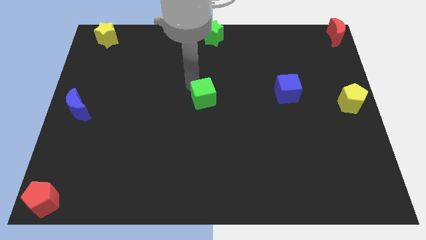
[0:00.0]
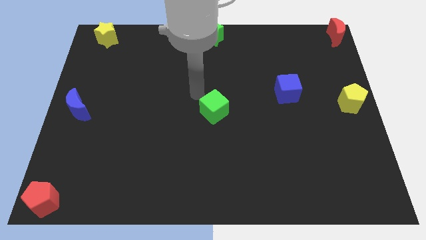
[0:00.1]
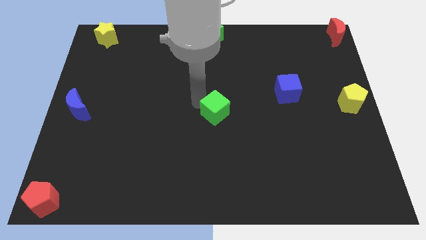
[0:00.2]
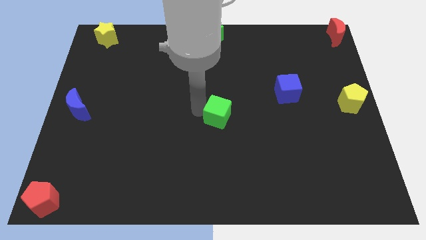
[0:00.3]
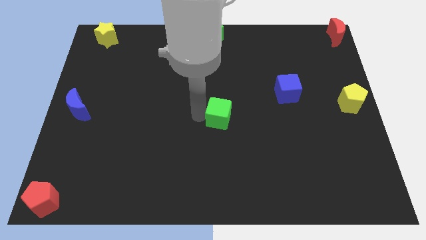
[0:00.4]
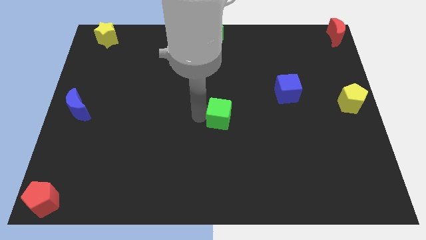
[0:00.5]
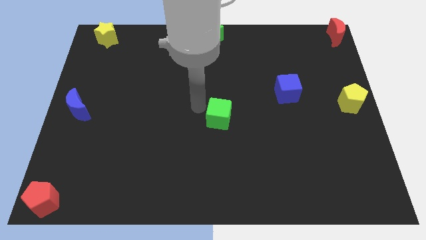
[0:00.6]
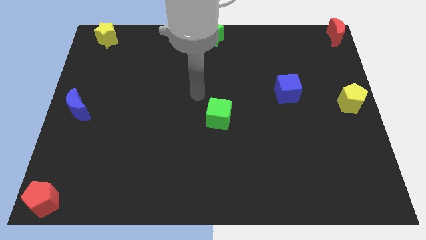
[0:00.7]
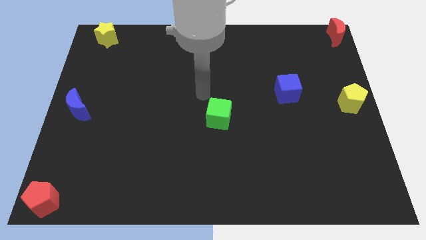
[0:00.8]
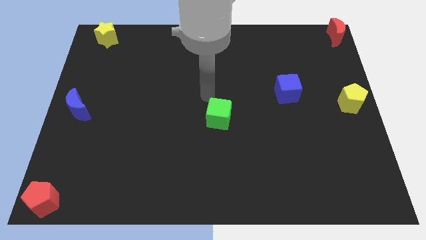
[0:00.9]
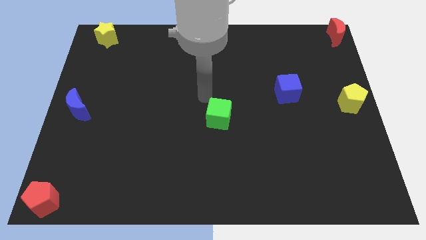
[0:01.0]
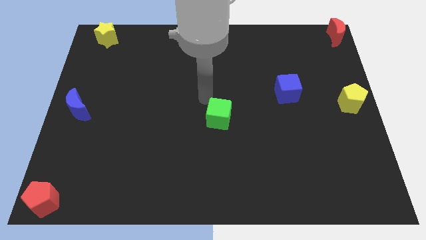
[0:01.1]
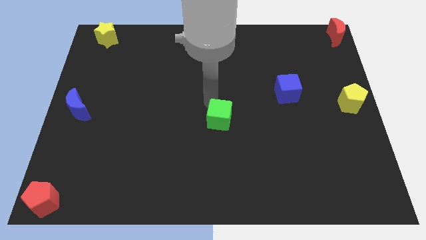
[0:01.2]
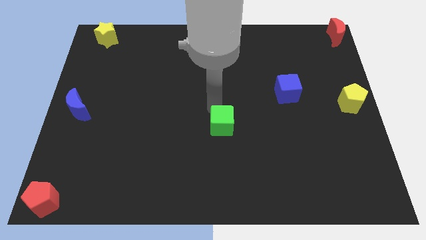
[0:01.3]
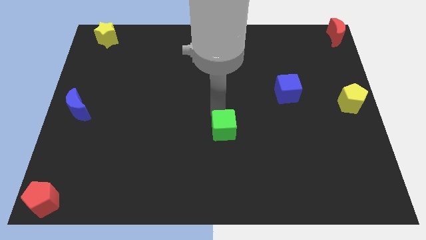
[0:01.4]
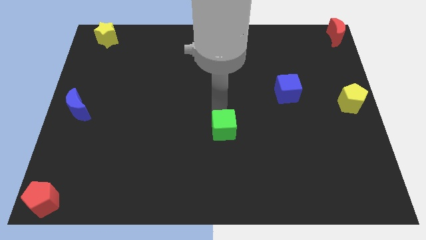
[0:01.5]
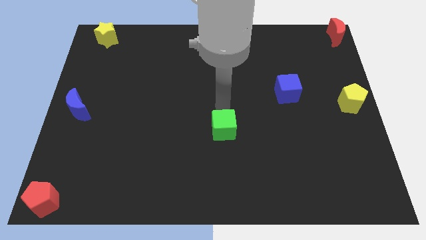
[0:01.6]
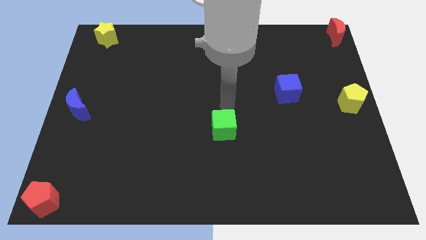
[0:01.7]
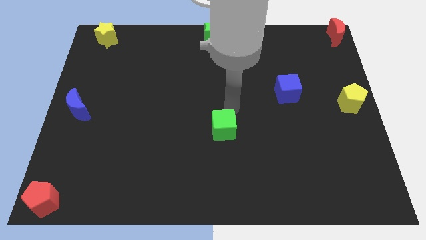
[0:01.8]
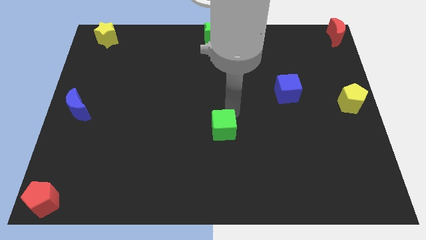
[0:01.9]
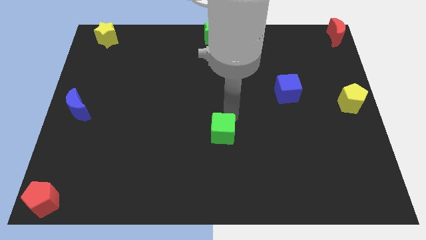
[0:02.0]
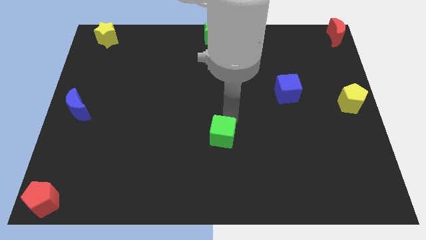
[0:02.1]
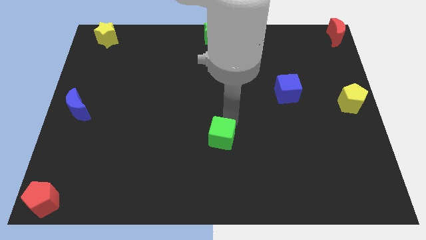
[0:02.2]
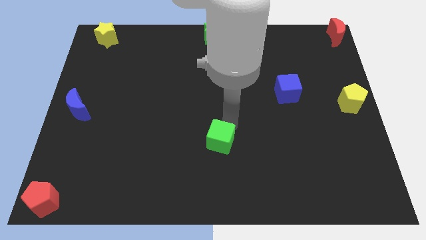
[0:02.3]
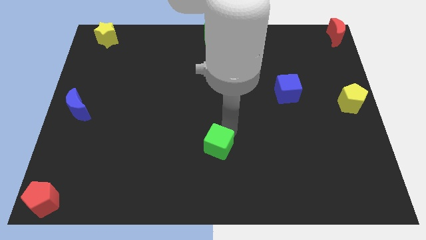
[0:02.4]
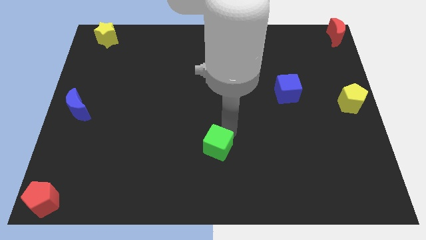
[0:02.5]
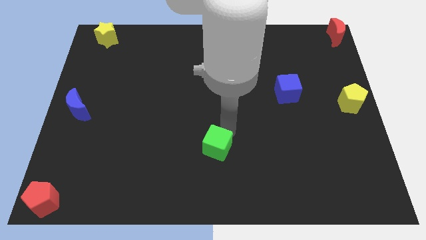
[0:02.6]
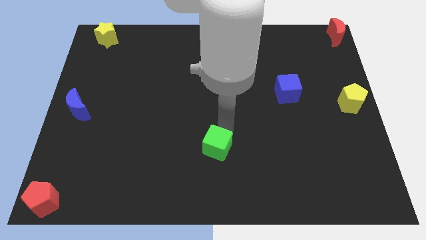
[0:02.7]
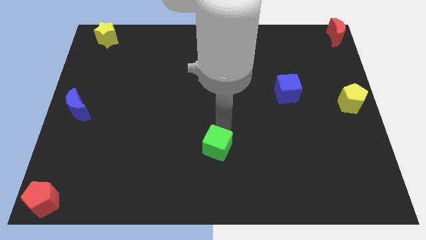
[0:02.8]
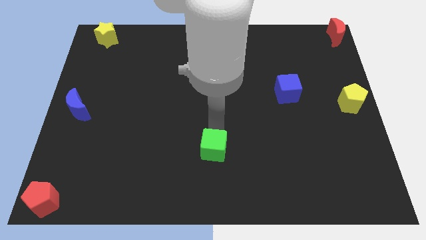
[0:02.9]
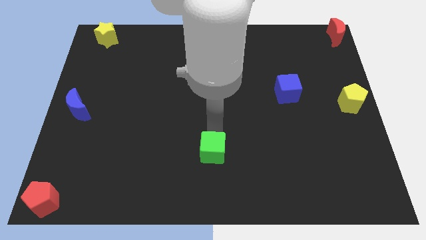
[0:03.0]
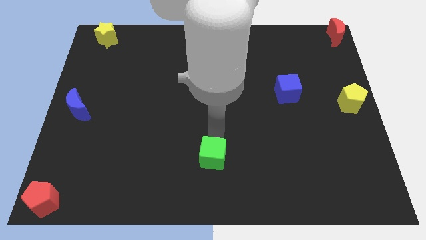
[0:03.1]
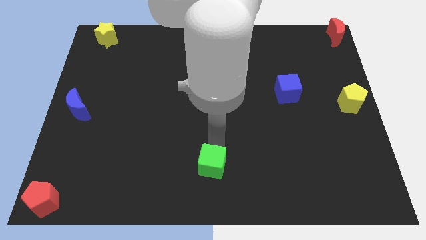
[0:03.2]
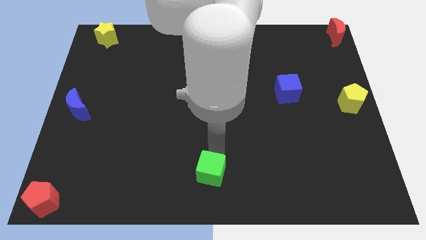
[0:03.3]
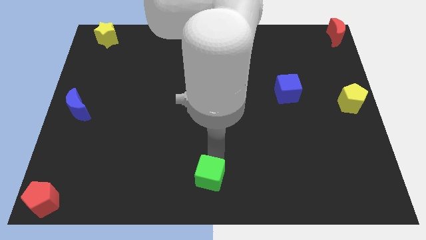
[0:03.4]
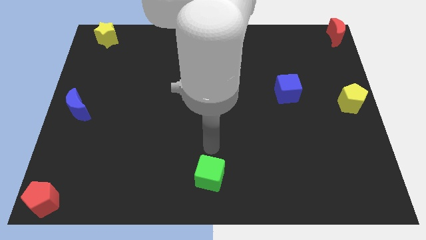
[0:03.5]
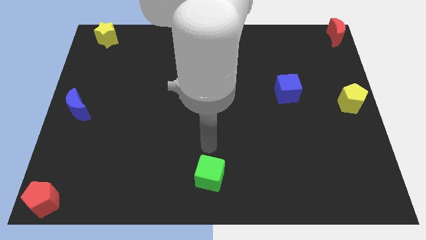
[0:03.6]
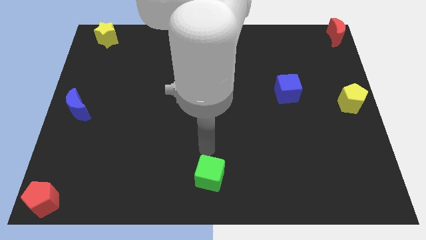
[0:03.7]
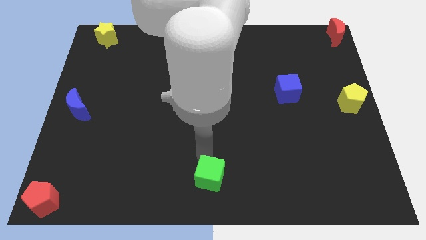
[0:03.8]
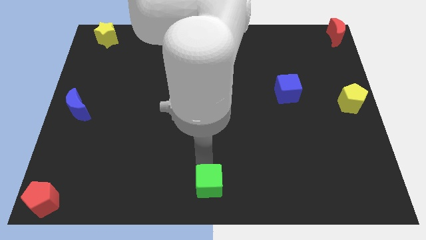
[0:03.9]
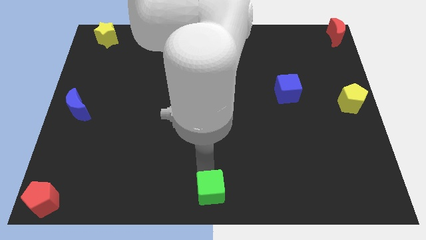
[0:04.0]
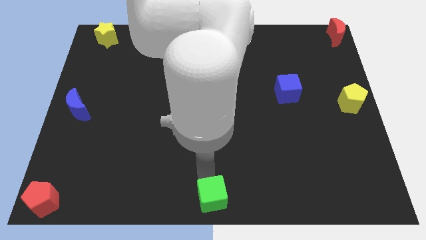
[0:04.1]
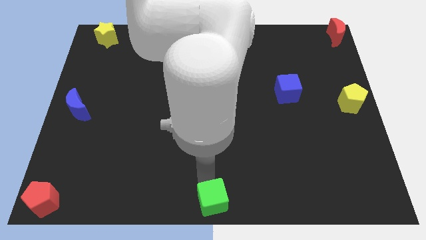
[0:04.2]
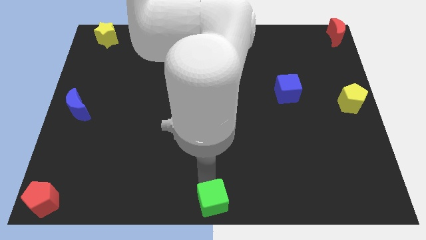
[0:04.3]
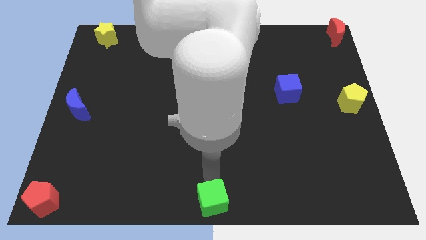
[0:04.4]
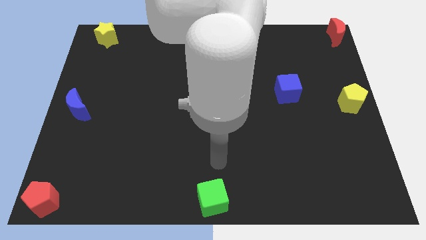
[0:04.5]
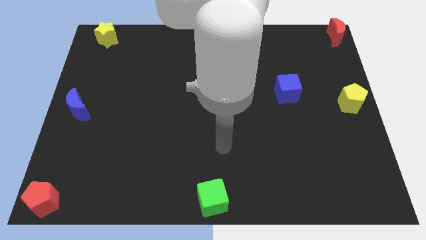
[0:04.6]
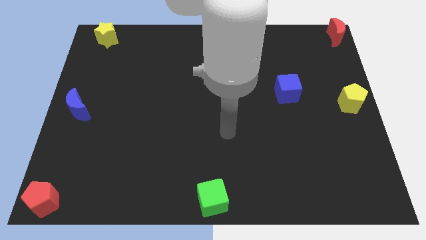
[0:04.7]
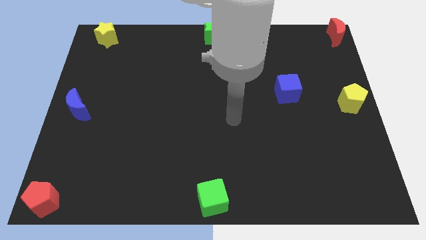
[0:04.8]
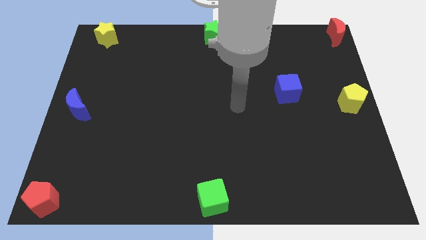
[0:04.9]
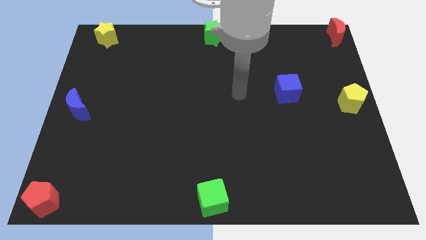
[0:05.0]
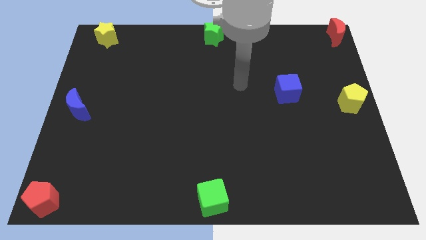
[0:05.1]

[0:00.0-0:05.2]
move the green cube towards the bottom center

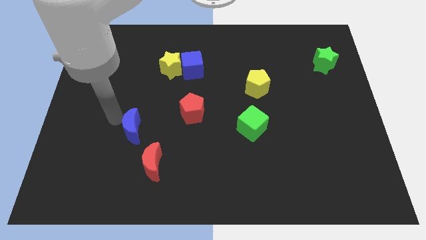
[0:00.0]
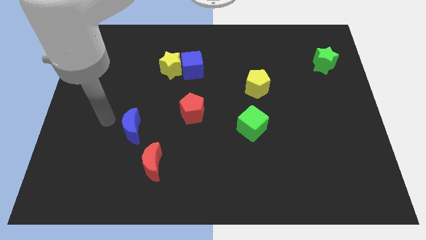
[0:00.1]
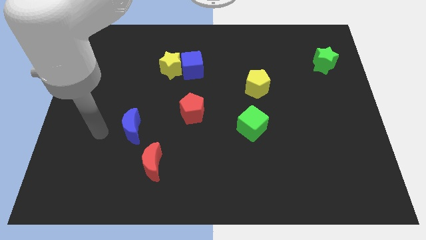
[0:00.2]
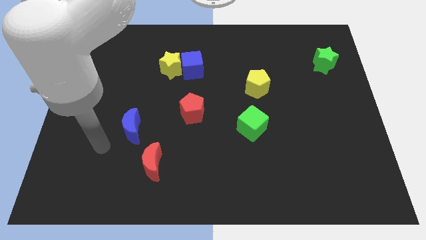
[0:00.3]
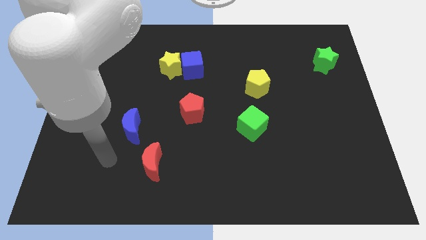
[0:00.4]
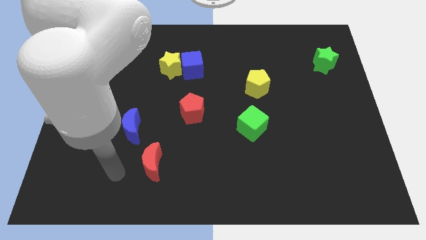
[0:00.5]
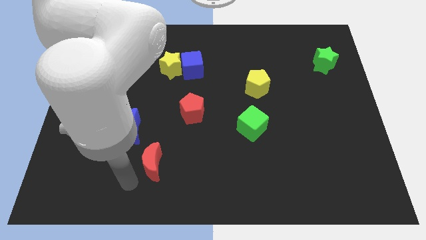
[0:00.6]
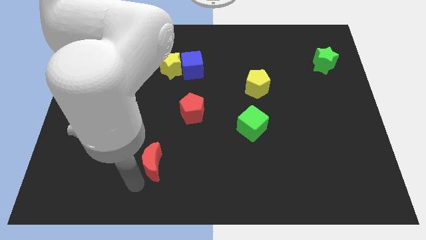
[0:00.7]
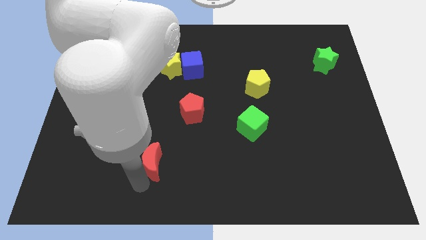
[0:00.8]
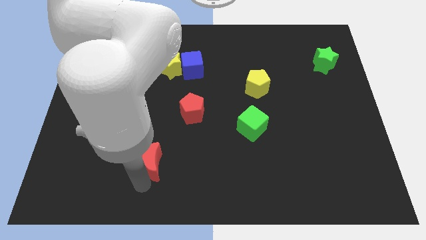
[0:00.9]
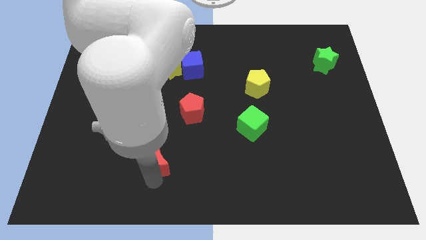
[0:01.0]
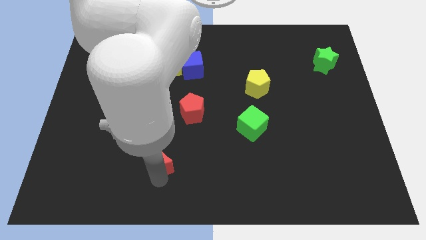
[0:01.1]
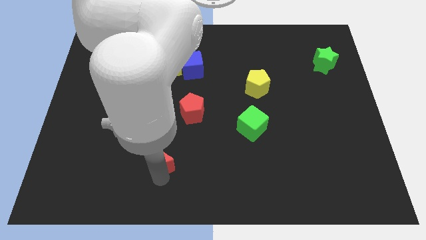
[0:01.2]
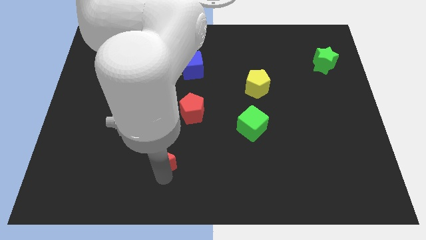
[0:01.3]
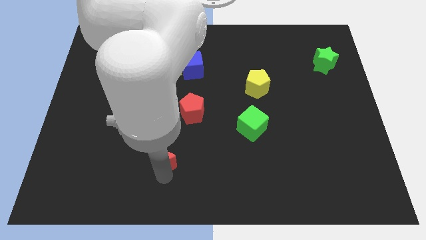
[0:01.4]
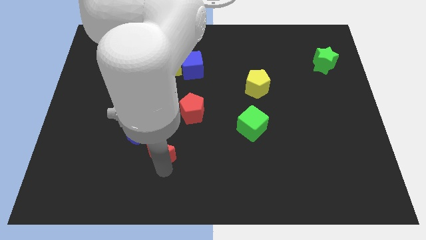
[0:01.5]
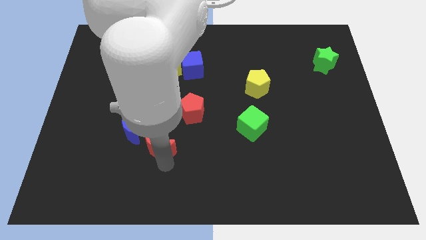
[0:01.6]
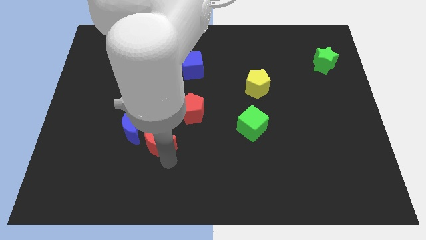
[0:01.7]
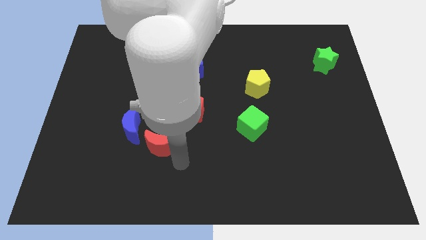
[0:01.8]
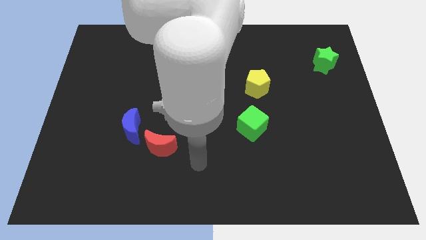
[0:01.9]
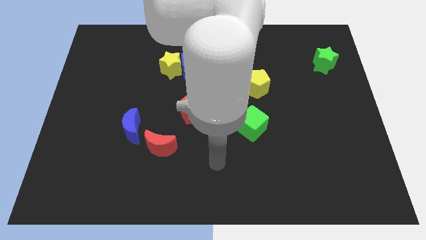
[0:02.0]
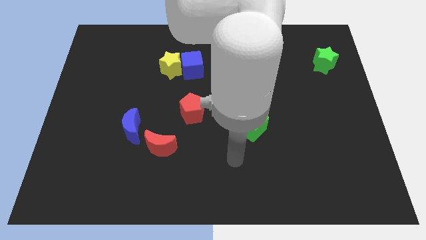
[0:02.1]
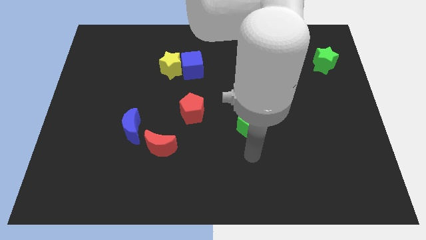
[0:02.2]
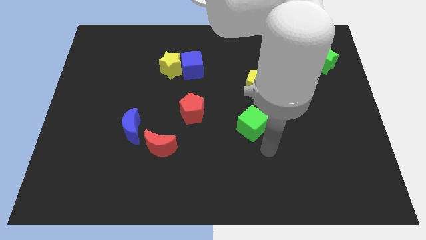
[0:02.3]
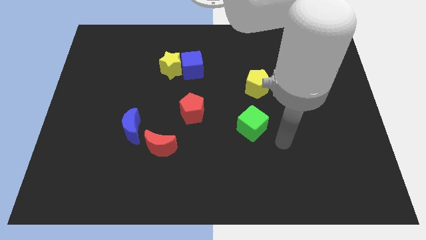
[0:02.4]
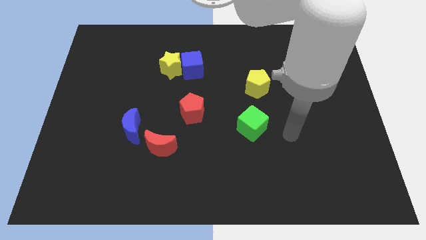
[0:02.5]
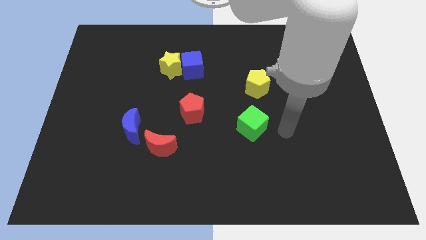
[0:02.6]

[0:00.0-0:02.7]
move the red crescent to the bottom left of the red pentagon

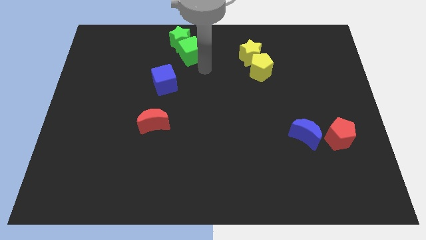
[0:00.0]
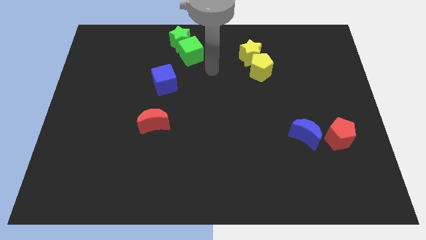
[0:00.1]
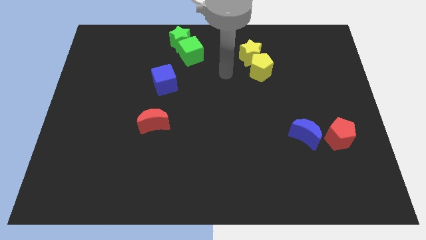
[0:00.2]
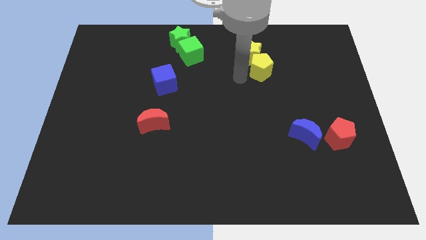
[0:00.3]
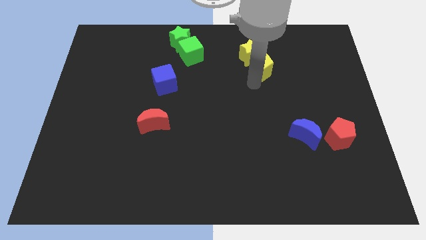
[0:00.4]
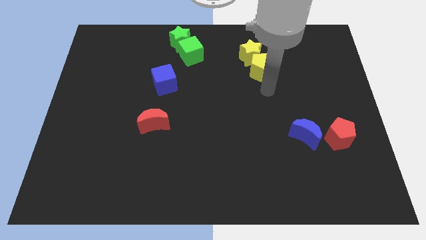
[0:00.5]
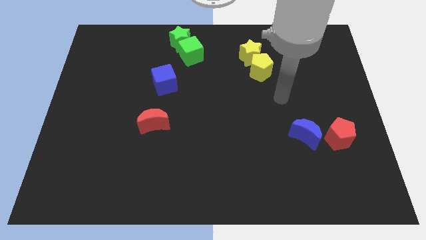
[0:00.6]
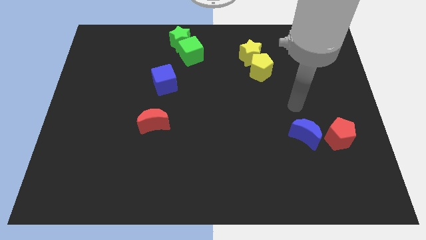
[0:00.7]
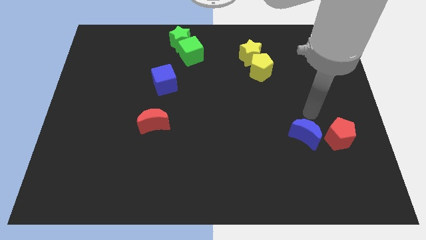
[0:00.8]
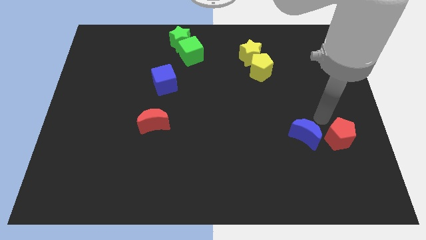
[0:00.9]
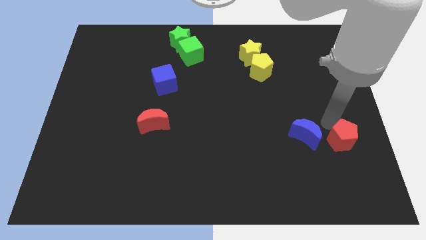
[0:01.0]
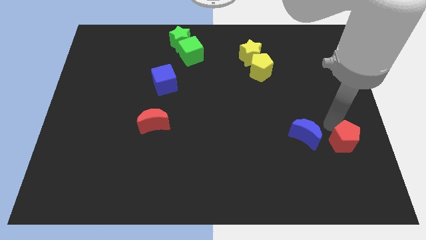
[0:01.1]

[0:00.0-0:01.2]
move your arm towards red pentagon
